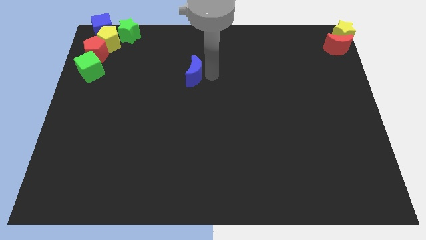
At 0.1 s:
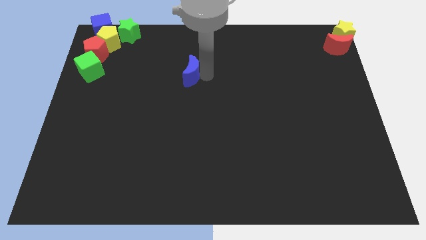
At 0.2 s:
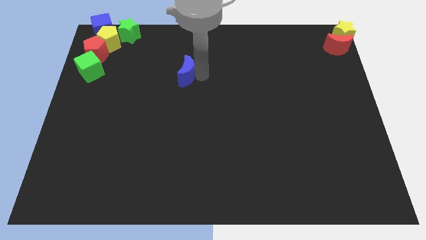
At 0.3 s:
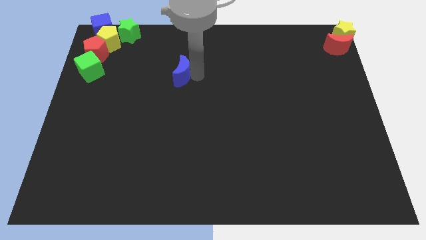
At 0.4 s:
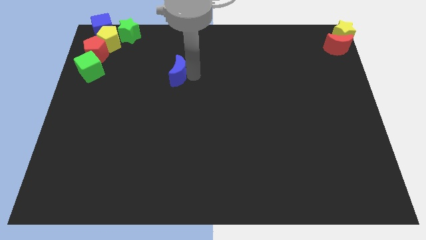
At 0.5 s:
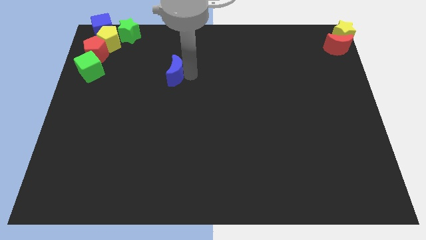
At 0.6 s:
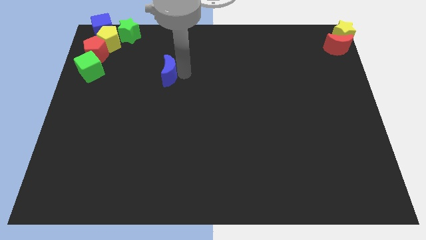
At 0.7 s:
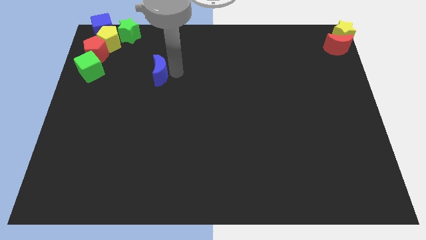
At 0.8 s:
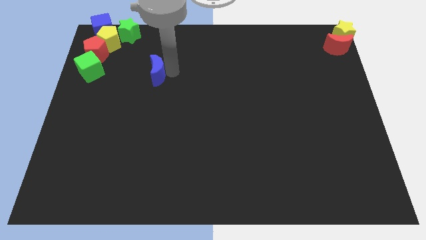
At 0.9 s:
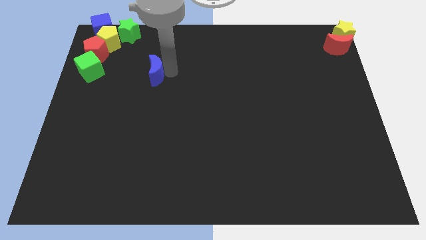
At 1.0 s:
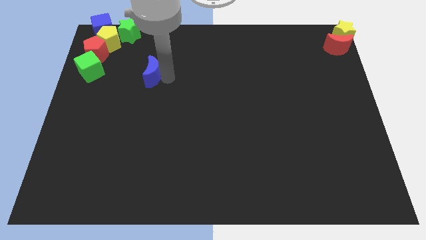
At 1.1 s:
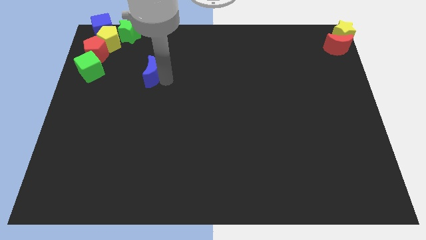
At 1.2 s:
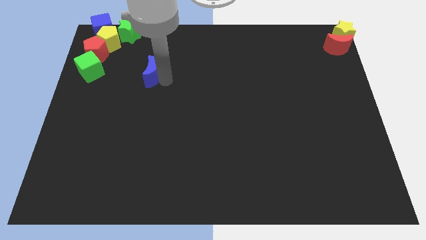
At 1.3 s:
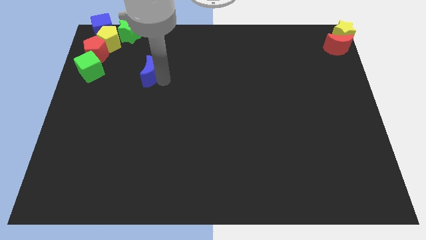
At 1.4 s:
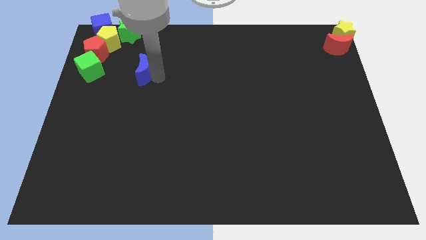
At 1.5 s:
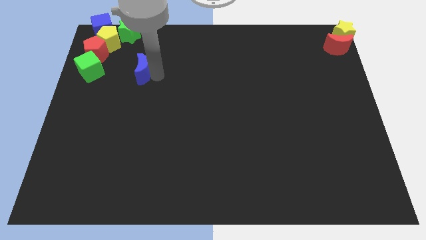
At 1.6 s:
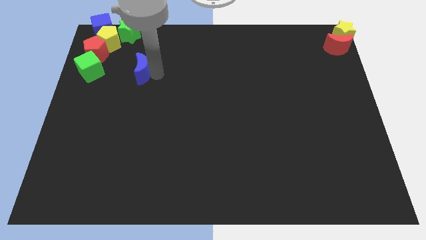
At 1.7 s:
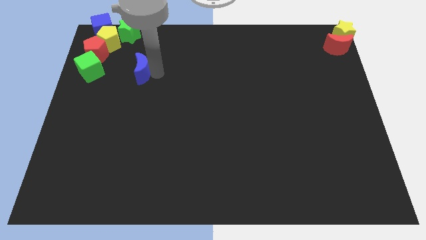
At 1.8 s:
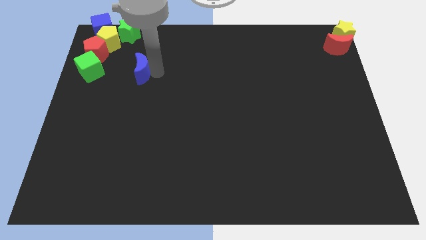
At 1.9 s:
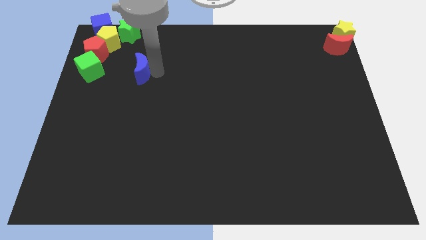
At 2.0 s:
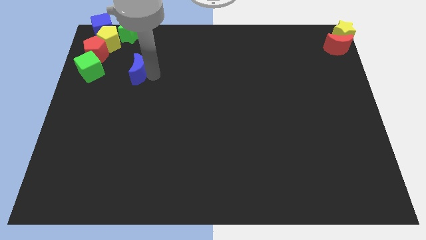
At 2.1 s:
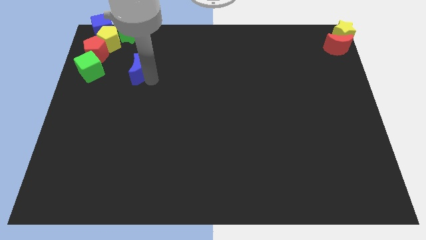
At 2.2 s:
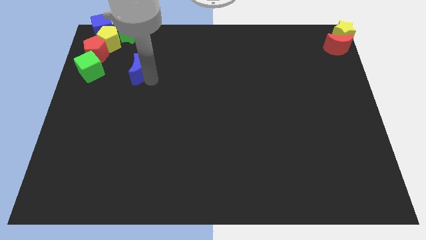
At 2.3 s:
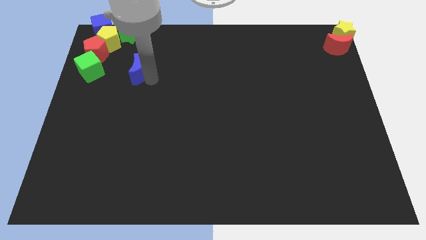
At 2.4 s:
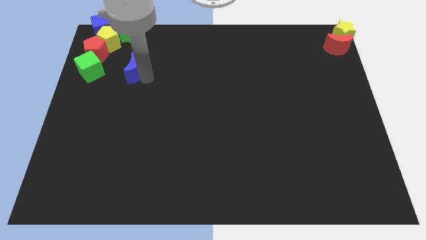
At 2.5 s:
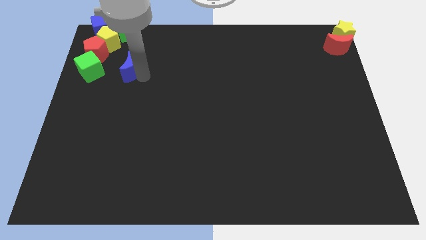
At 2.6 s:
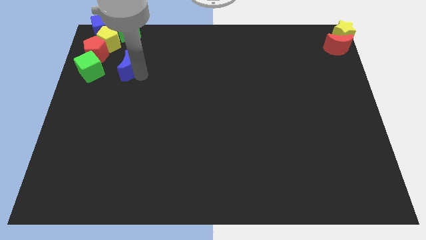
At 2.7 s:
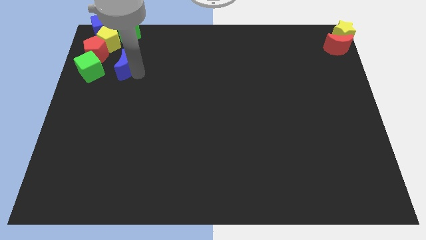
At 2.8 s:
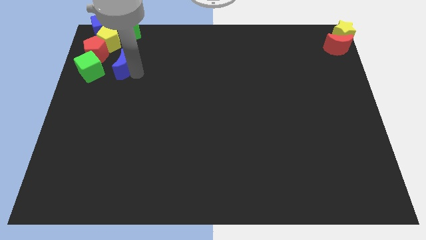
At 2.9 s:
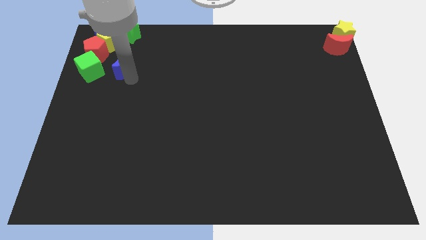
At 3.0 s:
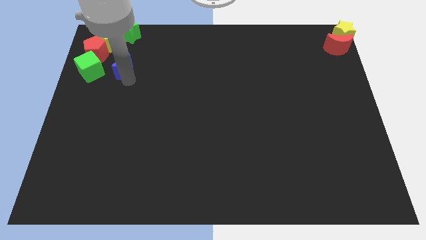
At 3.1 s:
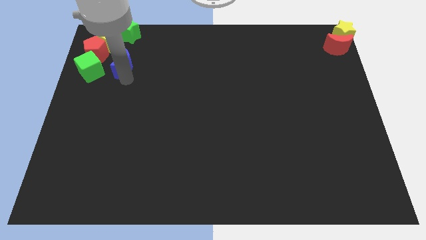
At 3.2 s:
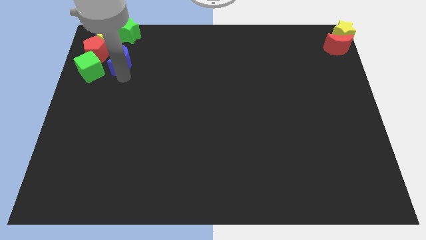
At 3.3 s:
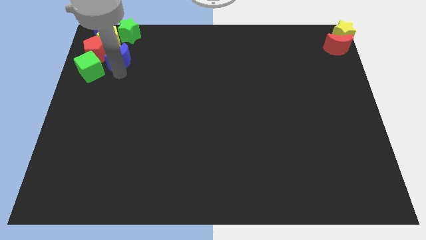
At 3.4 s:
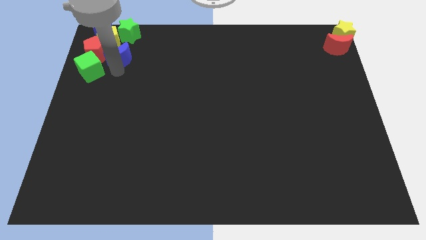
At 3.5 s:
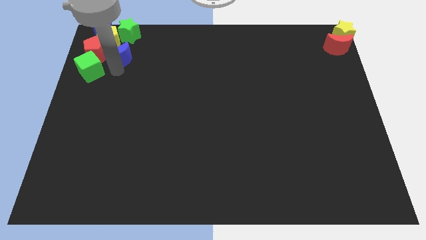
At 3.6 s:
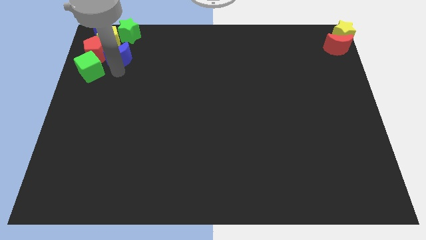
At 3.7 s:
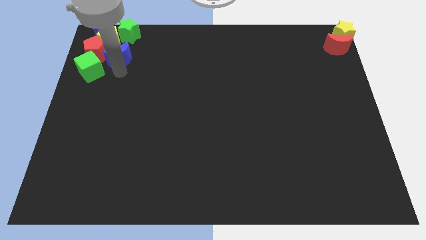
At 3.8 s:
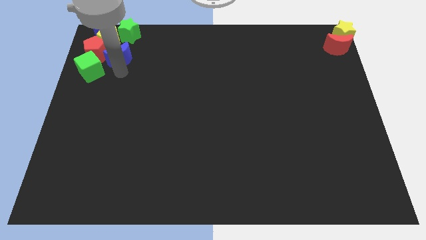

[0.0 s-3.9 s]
move the blue moon to the right of the red pentagon

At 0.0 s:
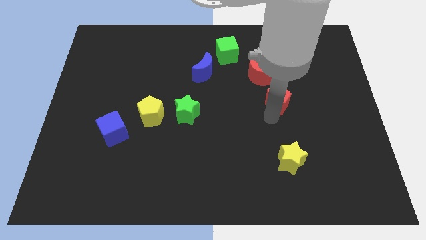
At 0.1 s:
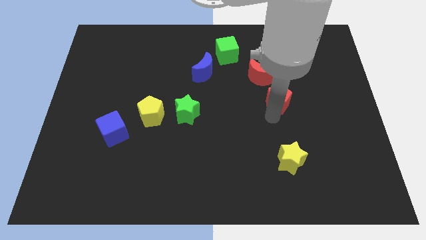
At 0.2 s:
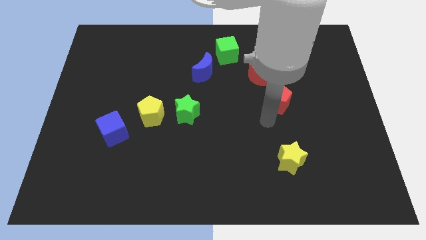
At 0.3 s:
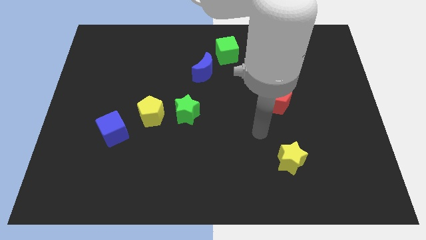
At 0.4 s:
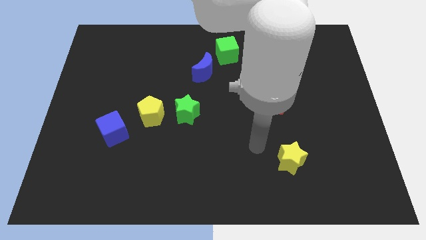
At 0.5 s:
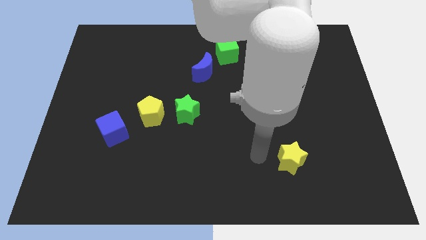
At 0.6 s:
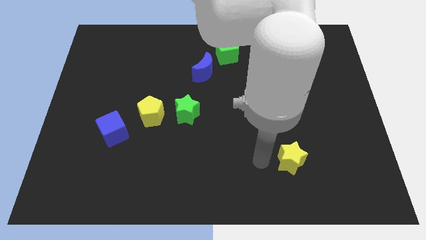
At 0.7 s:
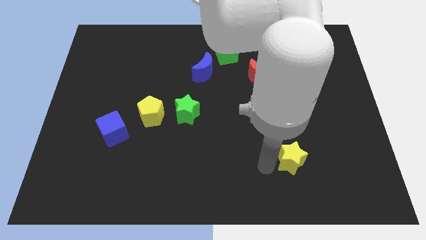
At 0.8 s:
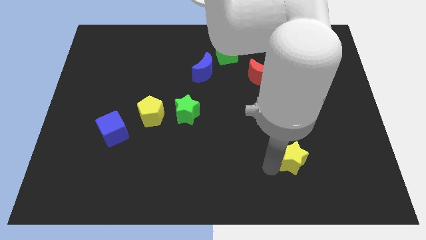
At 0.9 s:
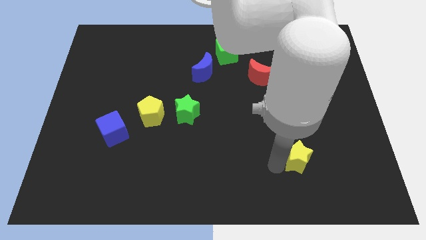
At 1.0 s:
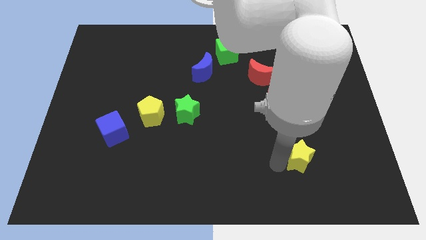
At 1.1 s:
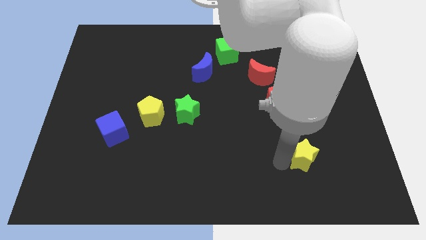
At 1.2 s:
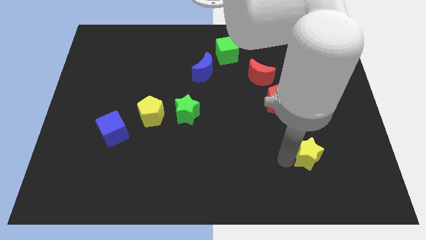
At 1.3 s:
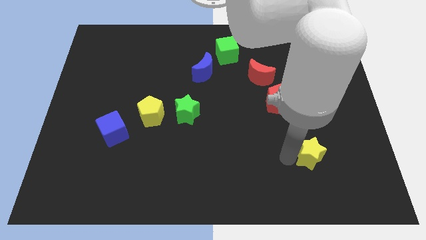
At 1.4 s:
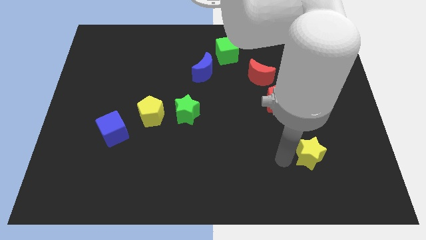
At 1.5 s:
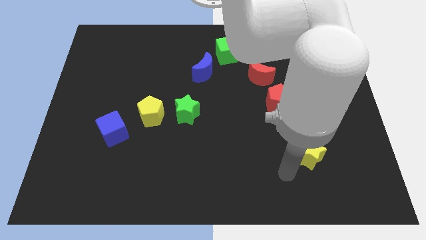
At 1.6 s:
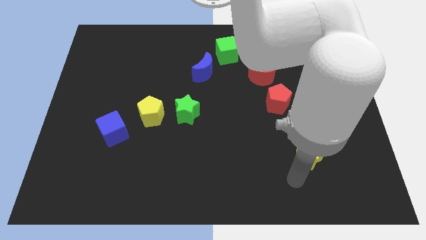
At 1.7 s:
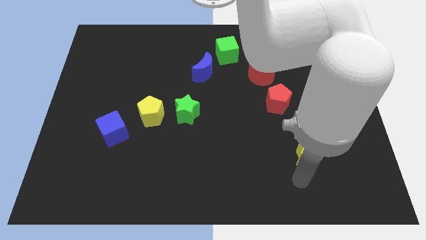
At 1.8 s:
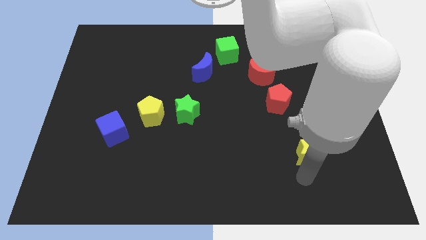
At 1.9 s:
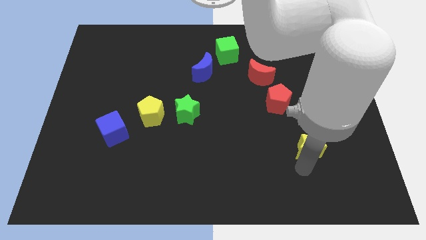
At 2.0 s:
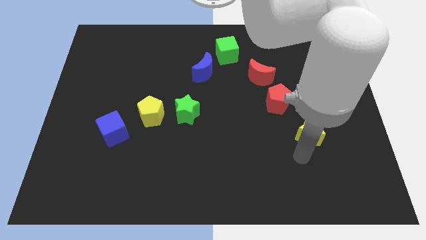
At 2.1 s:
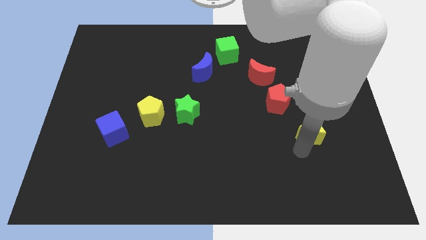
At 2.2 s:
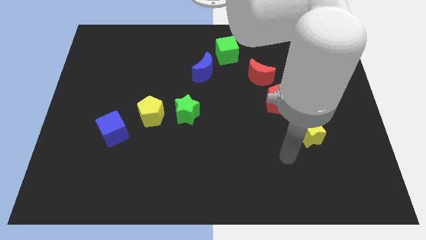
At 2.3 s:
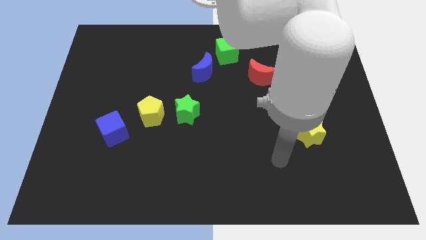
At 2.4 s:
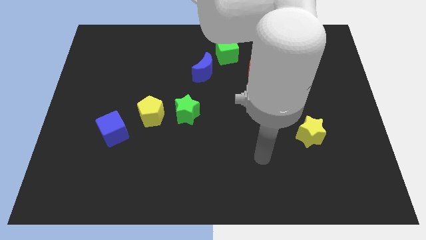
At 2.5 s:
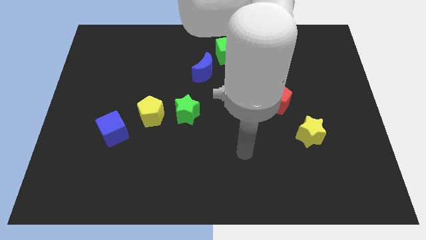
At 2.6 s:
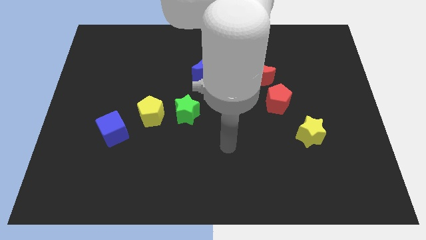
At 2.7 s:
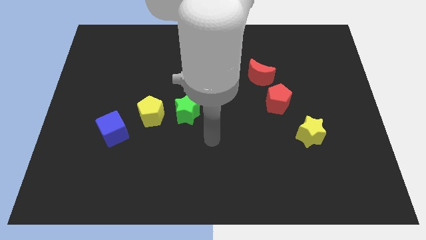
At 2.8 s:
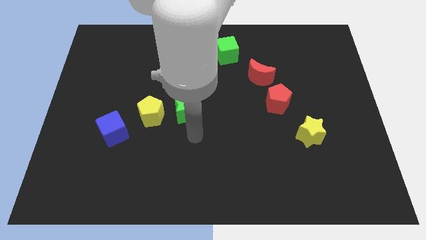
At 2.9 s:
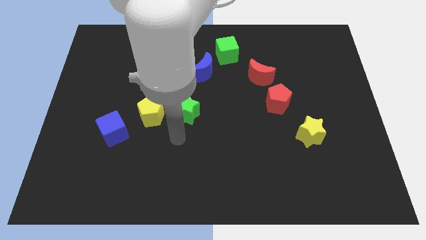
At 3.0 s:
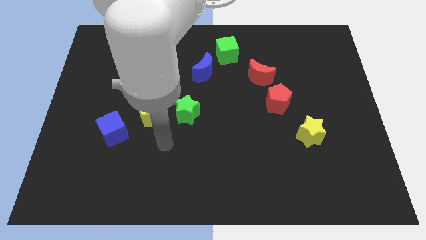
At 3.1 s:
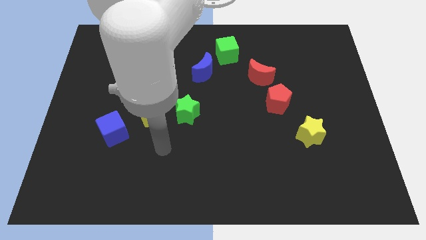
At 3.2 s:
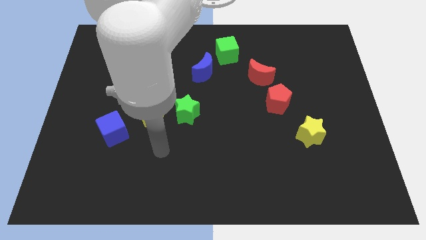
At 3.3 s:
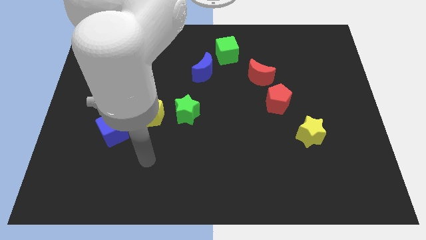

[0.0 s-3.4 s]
move the yellow star towards the center right

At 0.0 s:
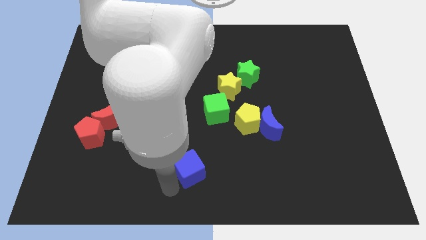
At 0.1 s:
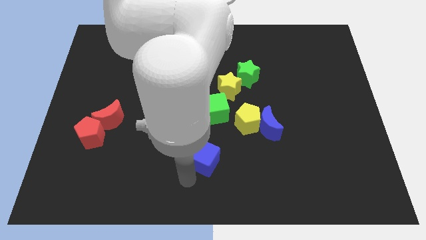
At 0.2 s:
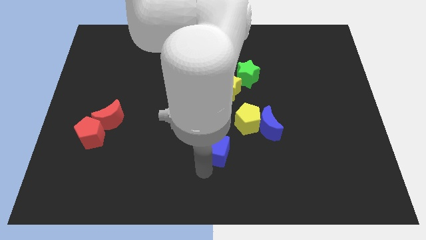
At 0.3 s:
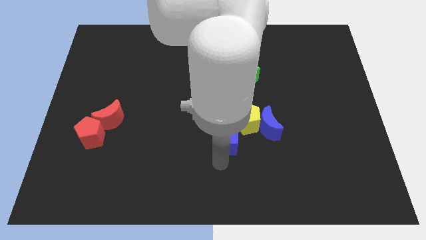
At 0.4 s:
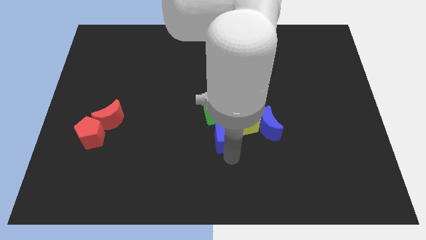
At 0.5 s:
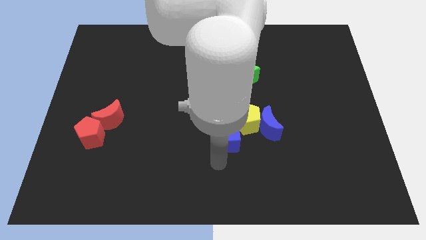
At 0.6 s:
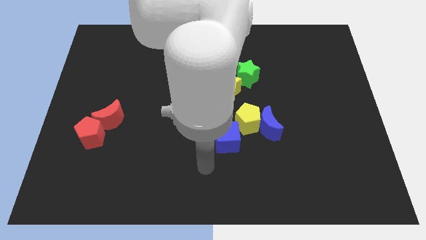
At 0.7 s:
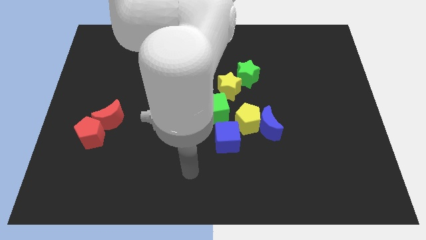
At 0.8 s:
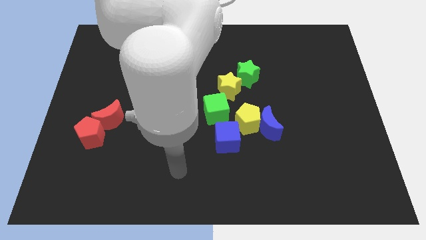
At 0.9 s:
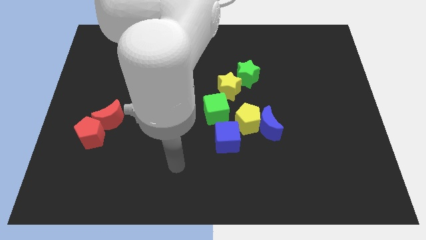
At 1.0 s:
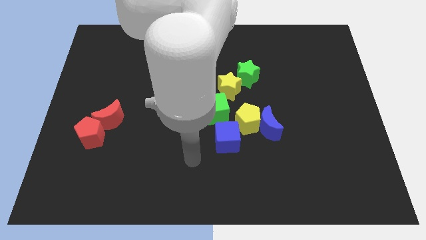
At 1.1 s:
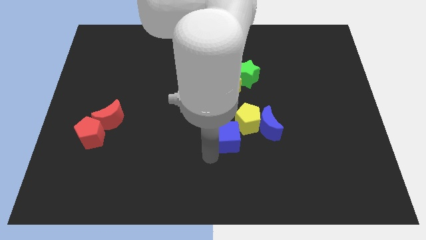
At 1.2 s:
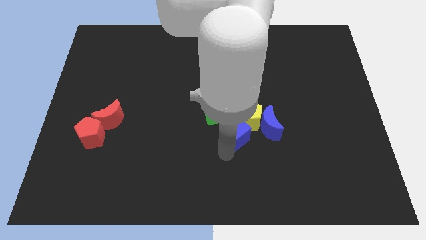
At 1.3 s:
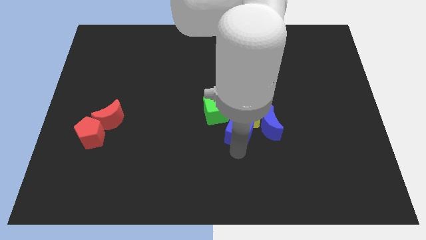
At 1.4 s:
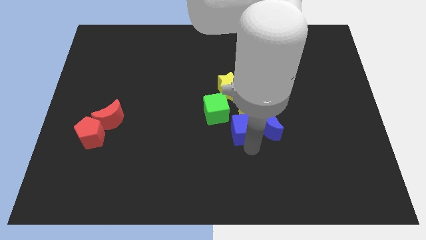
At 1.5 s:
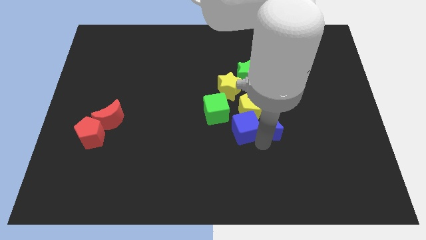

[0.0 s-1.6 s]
push the blue cube into the yellow pentagon and blue moon
